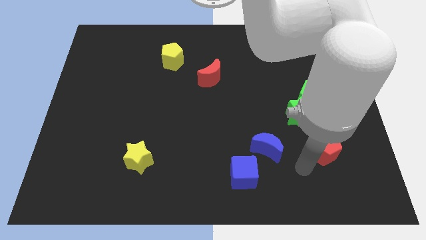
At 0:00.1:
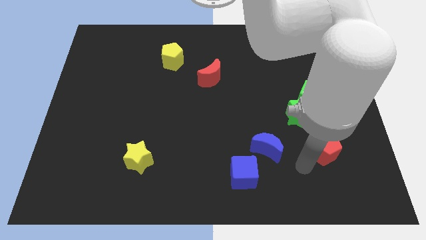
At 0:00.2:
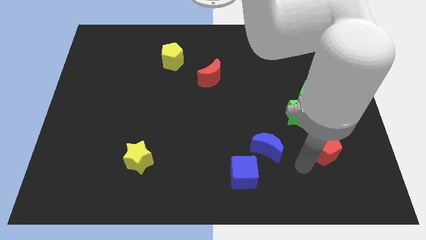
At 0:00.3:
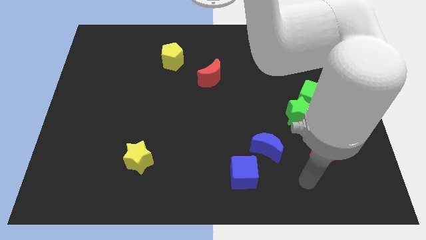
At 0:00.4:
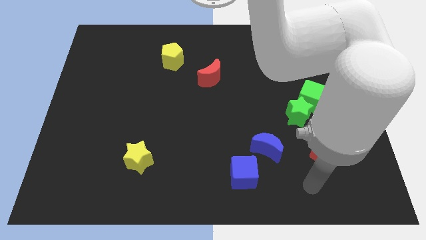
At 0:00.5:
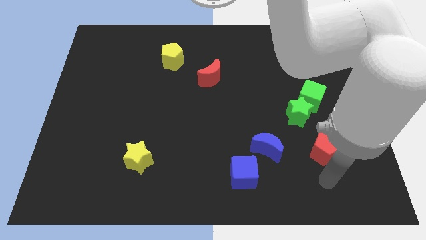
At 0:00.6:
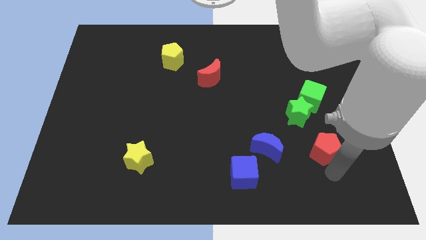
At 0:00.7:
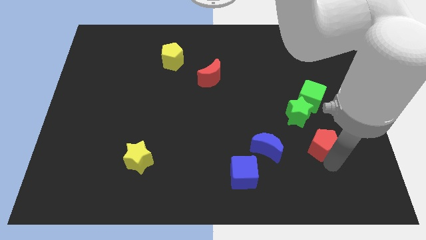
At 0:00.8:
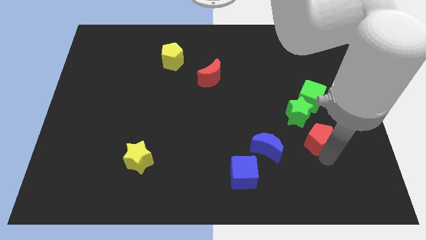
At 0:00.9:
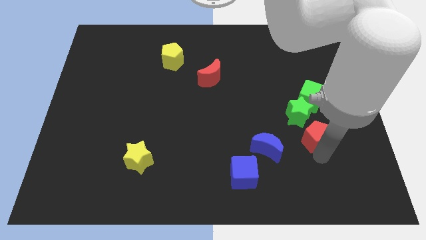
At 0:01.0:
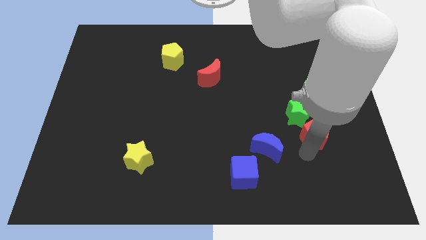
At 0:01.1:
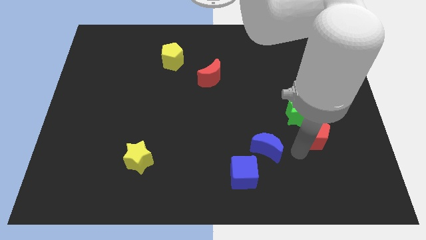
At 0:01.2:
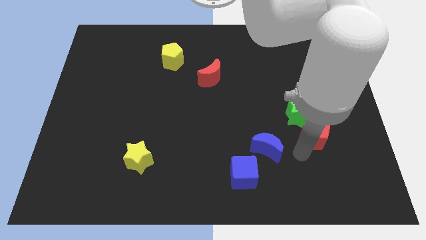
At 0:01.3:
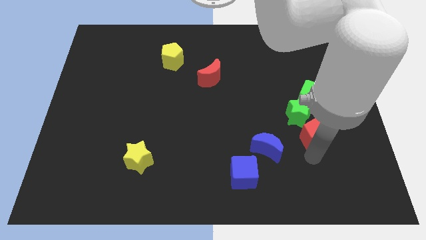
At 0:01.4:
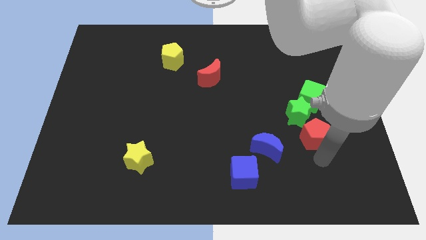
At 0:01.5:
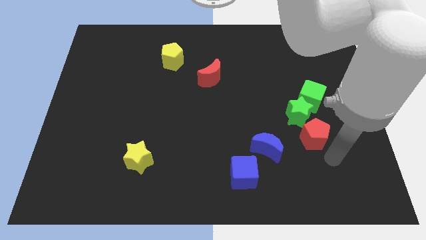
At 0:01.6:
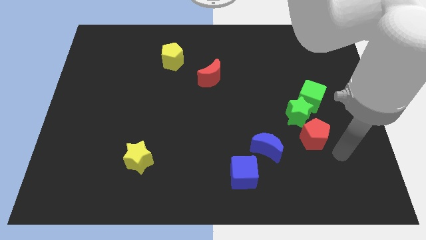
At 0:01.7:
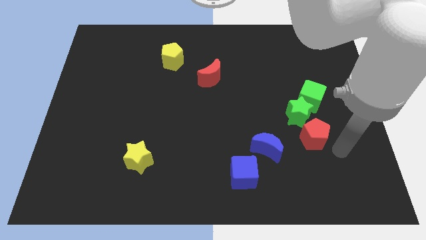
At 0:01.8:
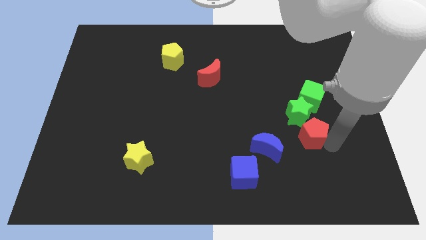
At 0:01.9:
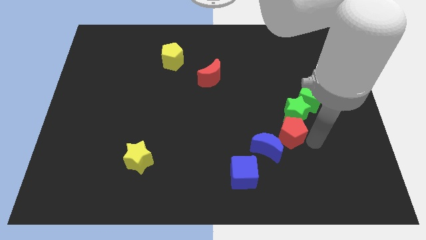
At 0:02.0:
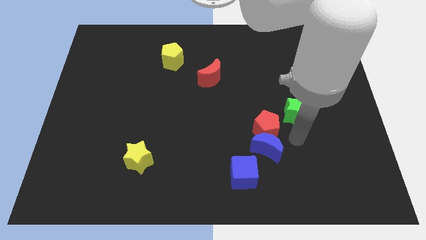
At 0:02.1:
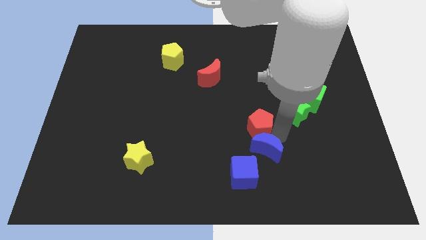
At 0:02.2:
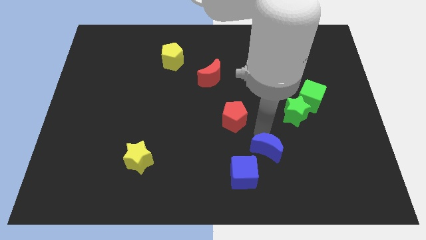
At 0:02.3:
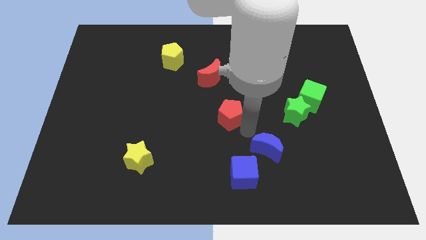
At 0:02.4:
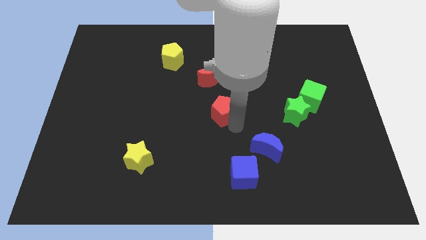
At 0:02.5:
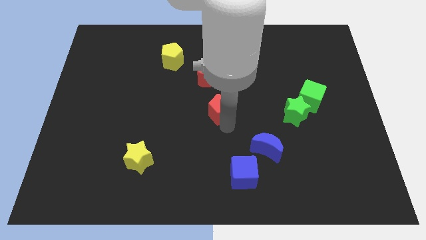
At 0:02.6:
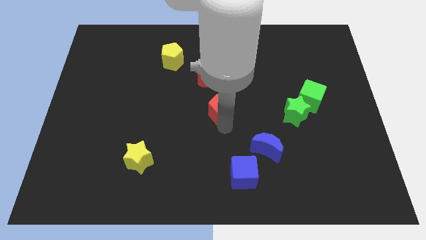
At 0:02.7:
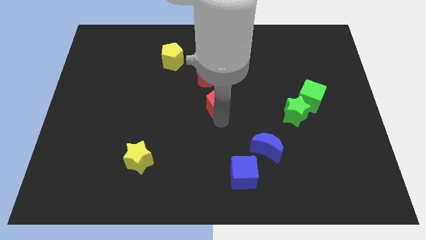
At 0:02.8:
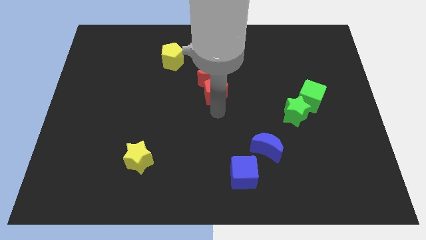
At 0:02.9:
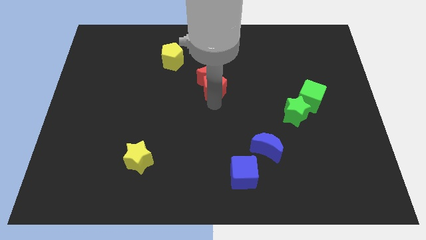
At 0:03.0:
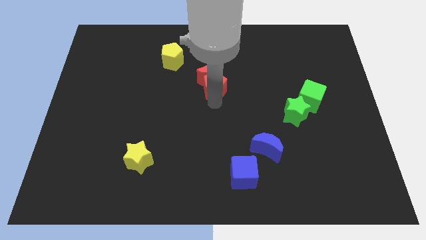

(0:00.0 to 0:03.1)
slide the red pentagon into the red crescent

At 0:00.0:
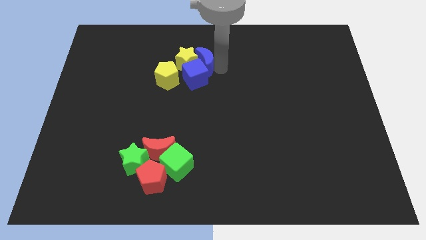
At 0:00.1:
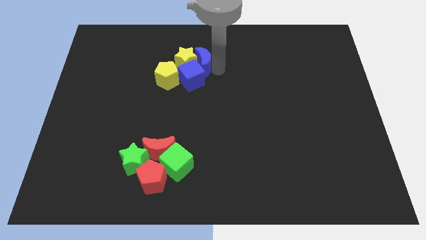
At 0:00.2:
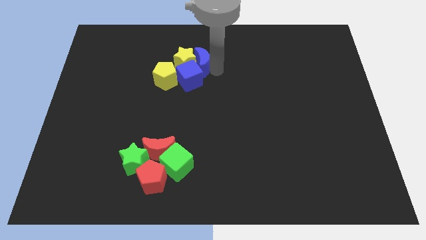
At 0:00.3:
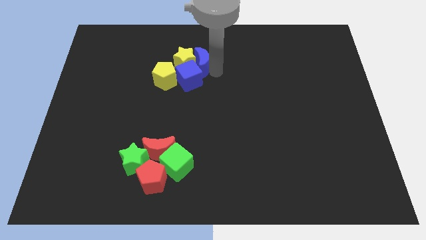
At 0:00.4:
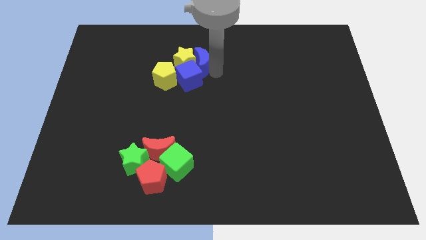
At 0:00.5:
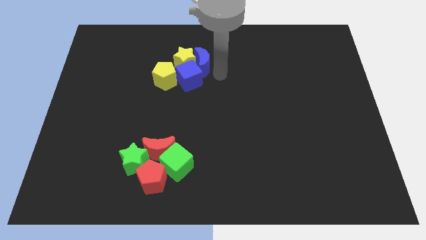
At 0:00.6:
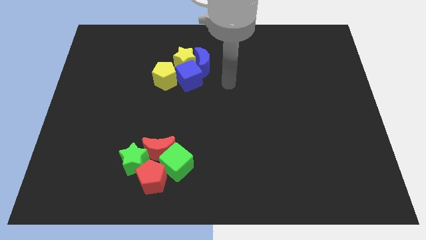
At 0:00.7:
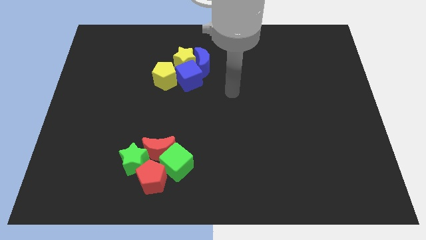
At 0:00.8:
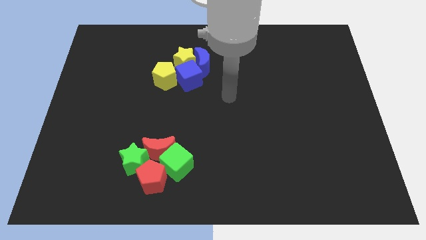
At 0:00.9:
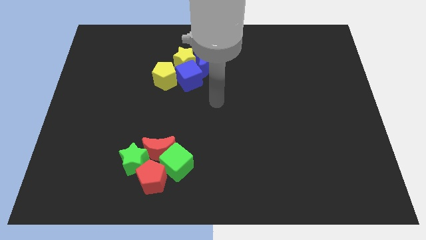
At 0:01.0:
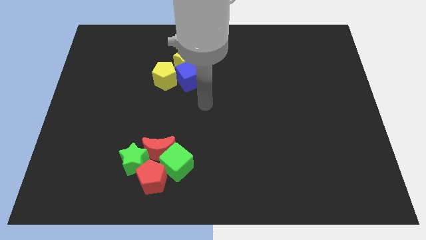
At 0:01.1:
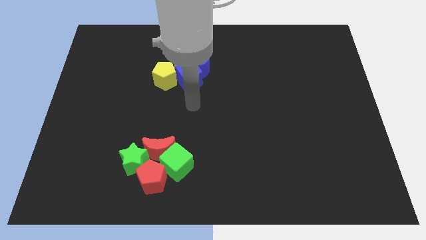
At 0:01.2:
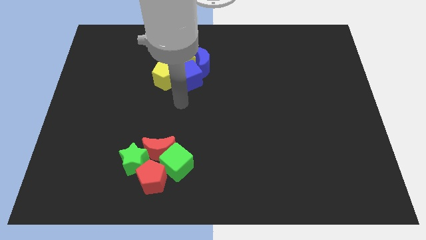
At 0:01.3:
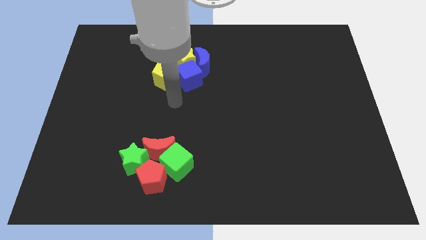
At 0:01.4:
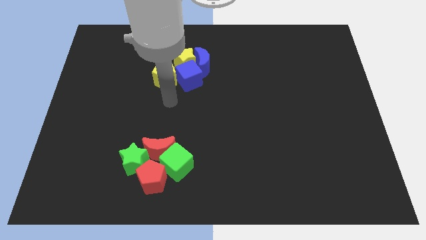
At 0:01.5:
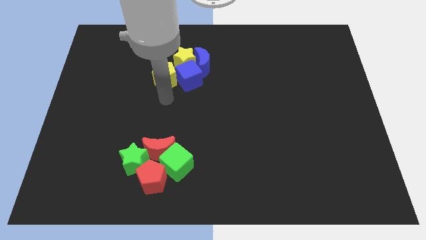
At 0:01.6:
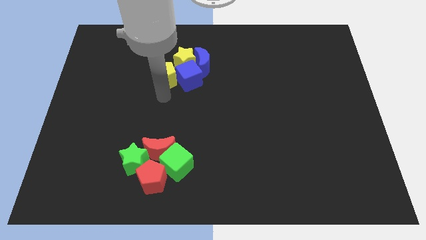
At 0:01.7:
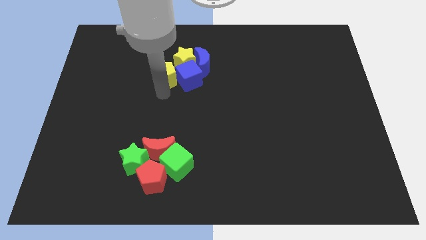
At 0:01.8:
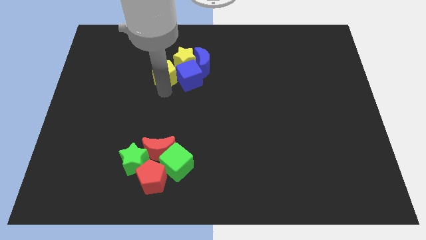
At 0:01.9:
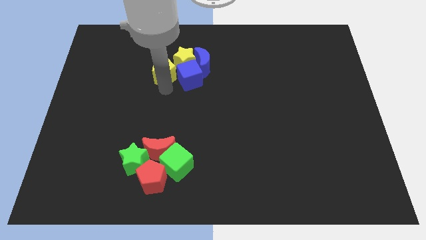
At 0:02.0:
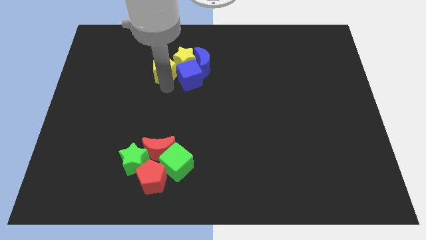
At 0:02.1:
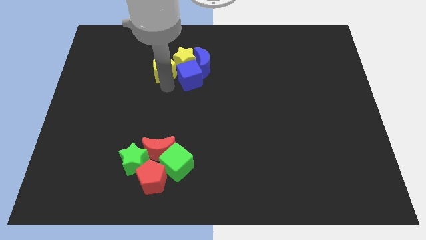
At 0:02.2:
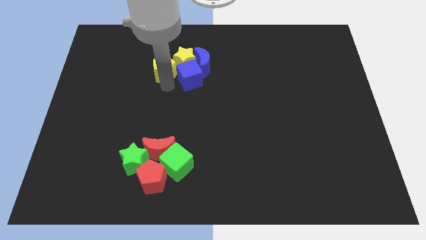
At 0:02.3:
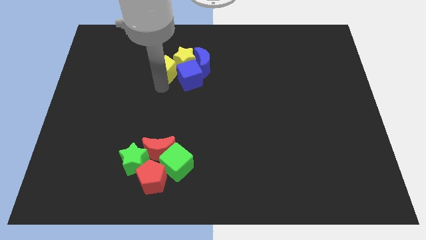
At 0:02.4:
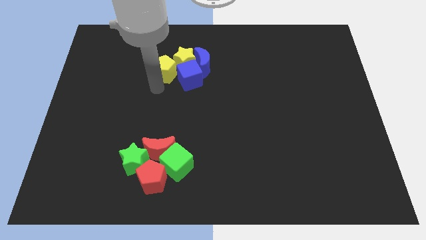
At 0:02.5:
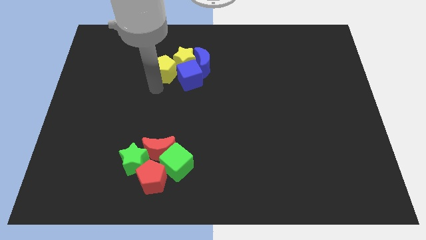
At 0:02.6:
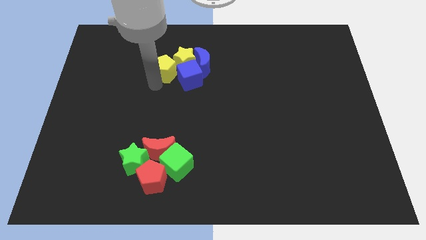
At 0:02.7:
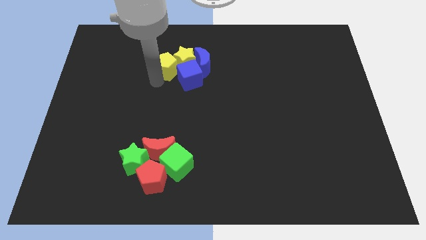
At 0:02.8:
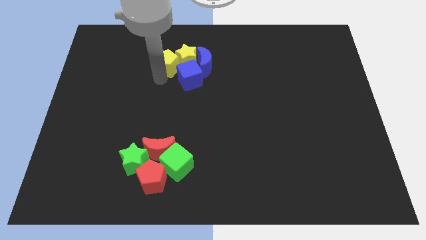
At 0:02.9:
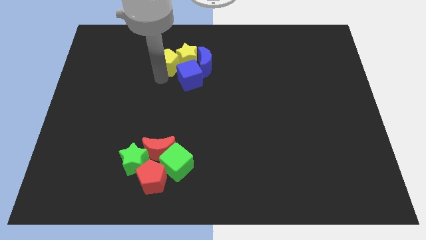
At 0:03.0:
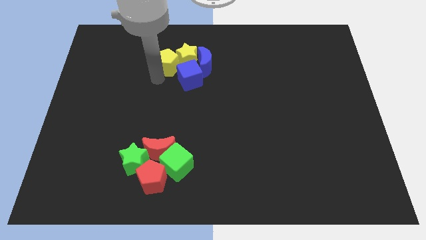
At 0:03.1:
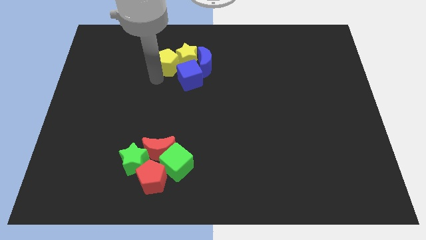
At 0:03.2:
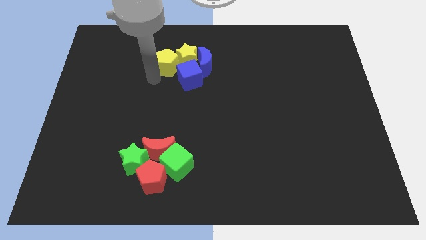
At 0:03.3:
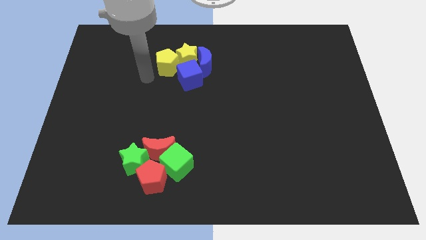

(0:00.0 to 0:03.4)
move blue crescent slightly left side along with yellow pentagon

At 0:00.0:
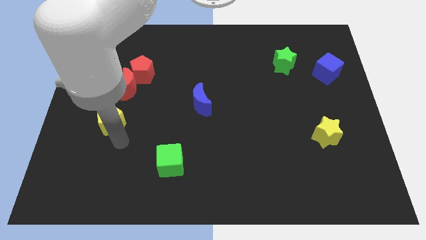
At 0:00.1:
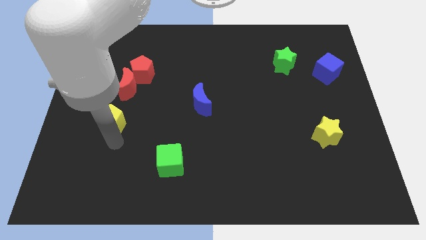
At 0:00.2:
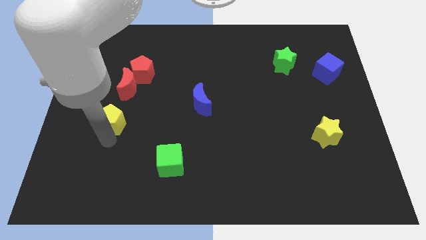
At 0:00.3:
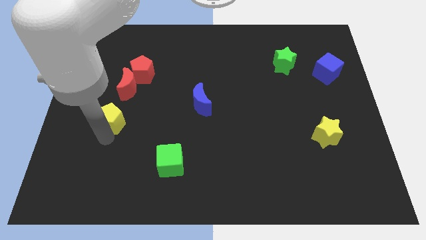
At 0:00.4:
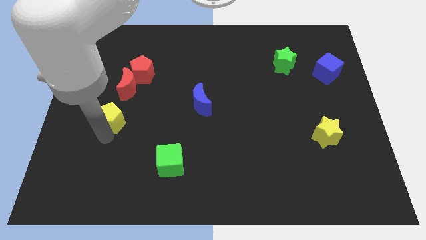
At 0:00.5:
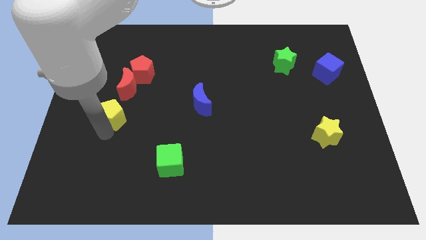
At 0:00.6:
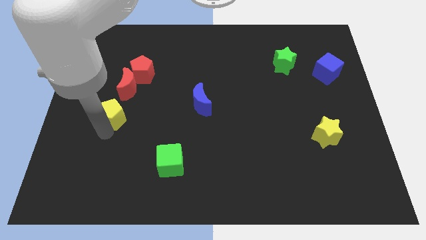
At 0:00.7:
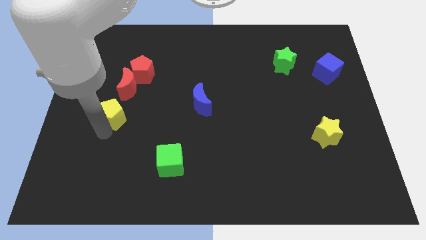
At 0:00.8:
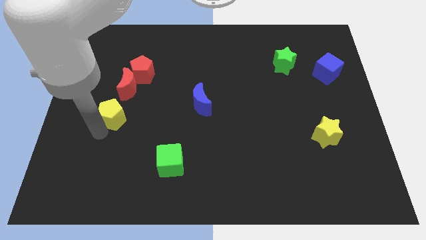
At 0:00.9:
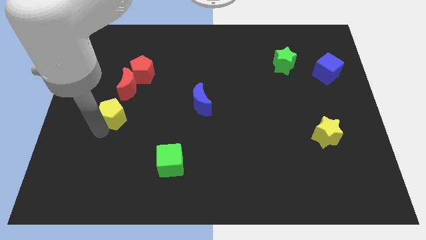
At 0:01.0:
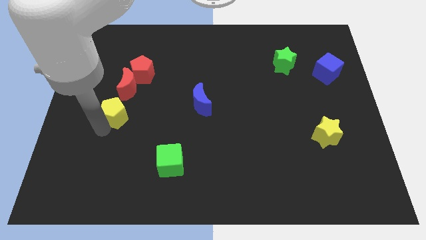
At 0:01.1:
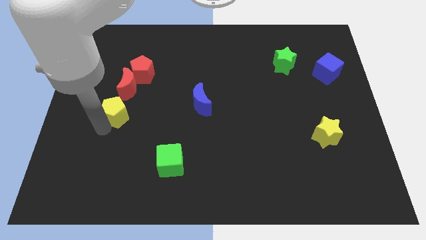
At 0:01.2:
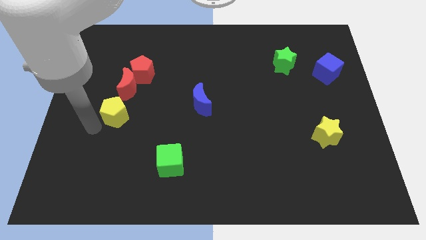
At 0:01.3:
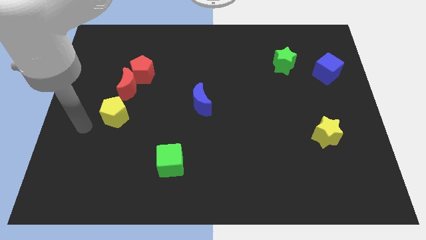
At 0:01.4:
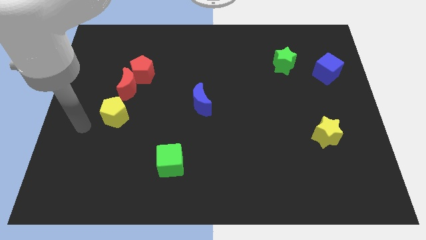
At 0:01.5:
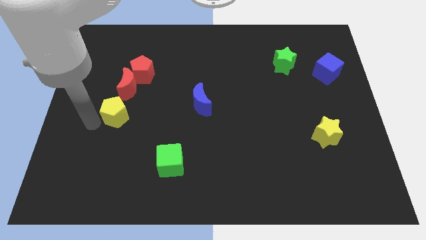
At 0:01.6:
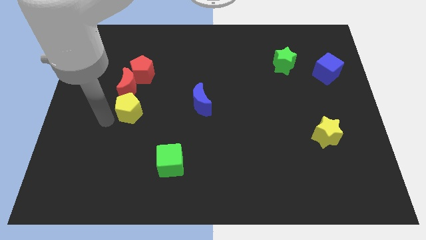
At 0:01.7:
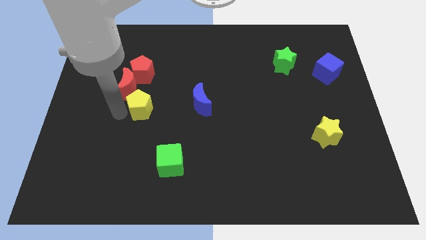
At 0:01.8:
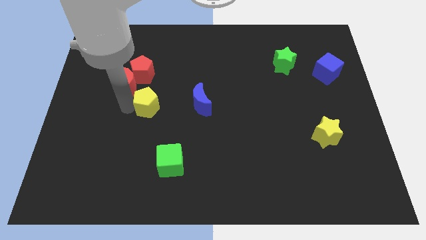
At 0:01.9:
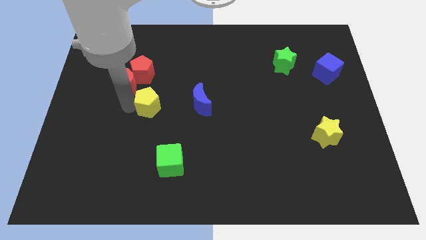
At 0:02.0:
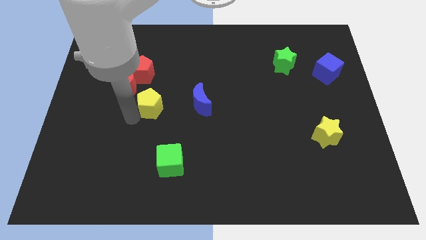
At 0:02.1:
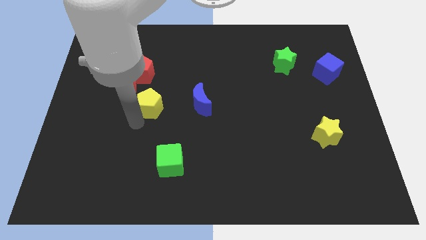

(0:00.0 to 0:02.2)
move the yellow pentagon to the bottom right of the red moon

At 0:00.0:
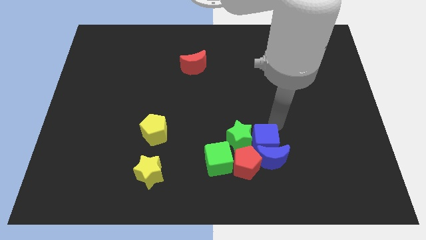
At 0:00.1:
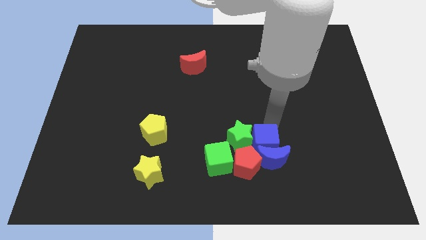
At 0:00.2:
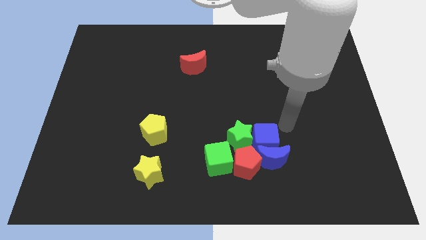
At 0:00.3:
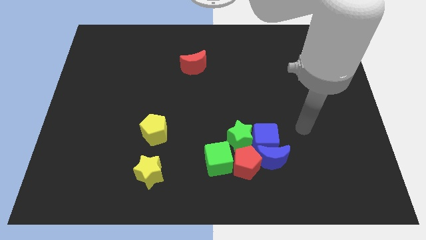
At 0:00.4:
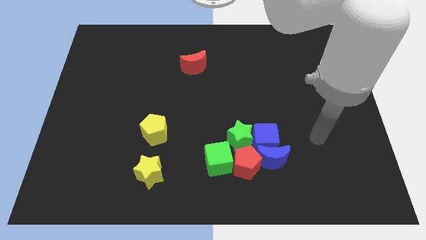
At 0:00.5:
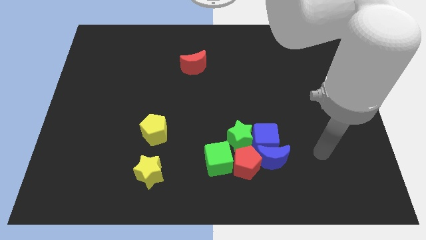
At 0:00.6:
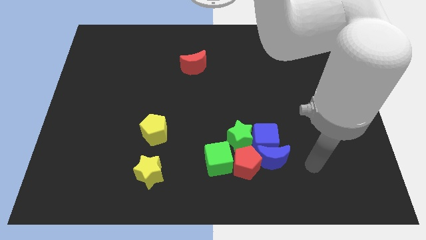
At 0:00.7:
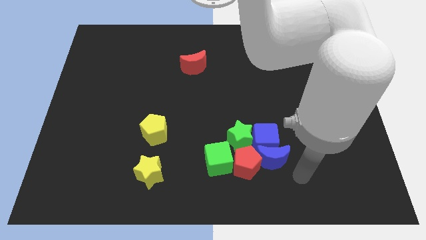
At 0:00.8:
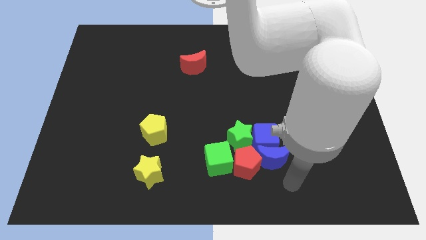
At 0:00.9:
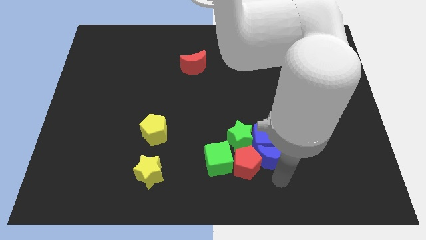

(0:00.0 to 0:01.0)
move the arm around the blue moon
